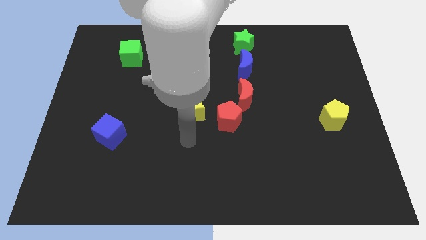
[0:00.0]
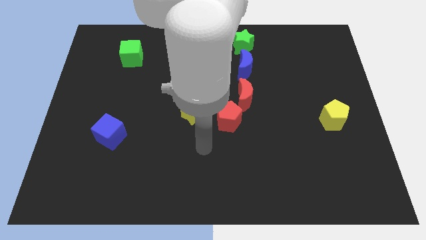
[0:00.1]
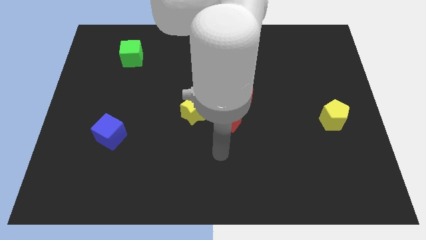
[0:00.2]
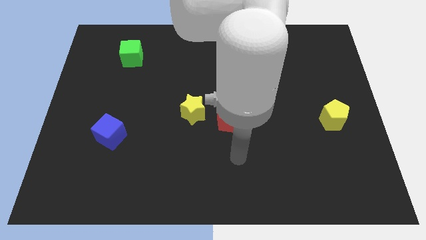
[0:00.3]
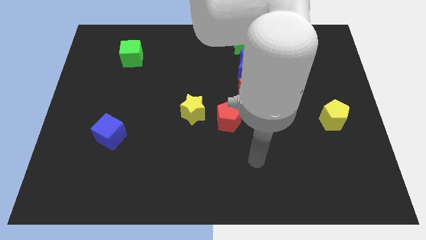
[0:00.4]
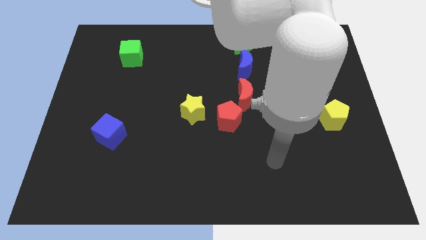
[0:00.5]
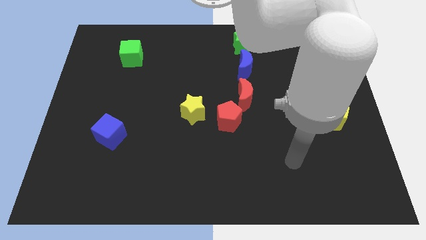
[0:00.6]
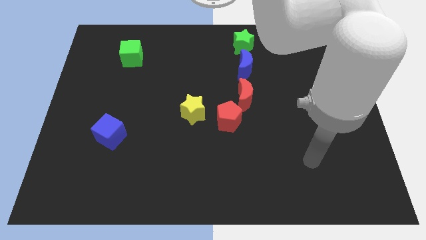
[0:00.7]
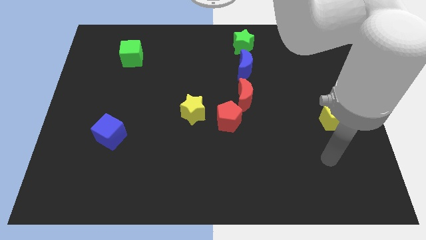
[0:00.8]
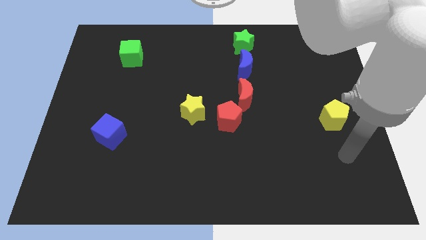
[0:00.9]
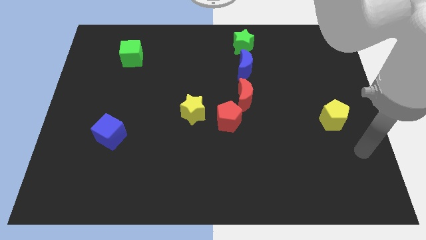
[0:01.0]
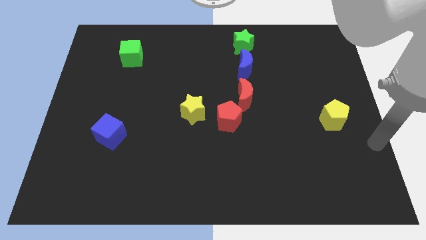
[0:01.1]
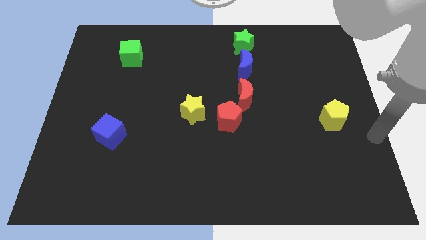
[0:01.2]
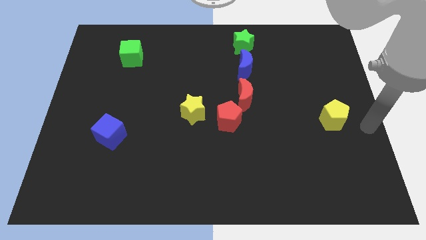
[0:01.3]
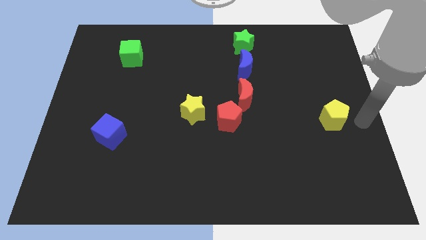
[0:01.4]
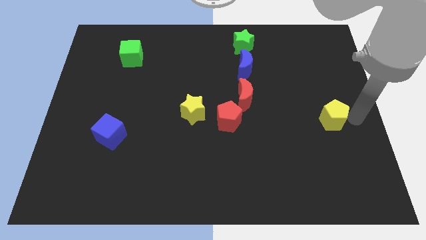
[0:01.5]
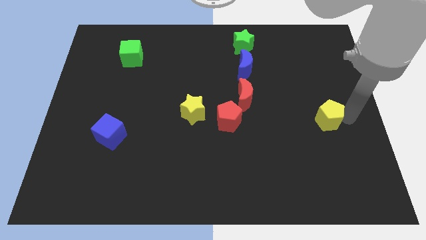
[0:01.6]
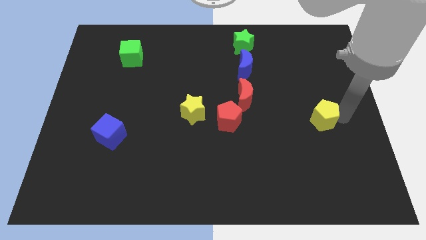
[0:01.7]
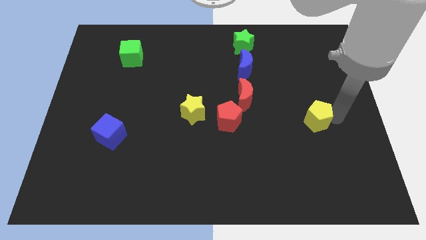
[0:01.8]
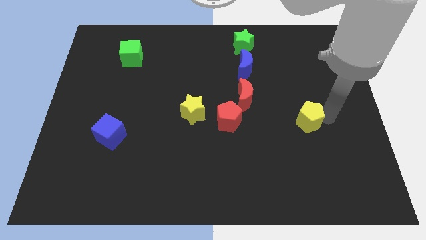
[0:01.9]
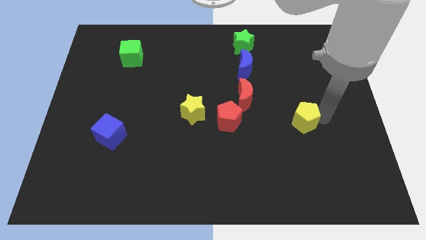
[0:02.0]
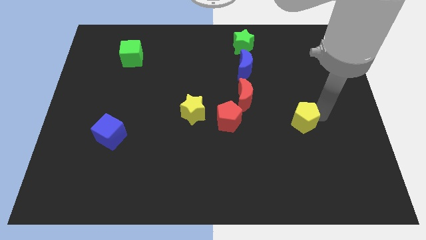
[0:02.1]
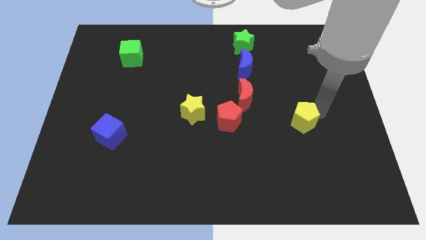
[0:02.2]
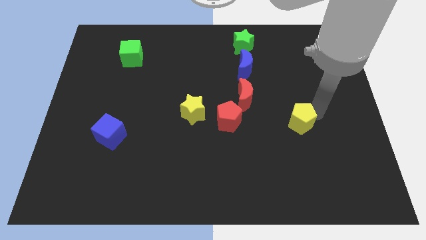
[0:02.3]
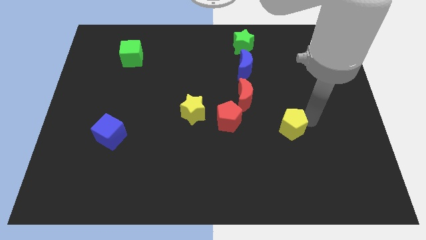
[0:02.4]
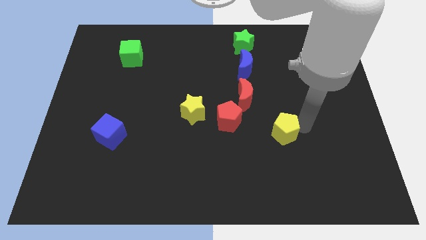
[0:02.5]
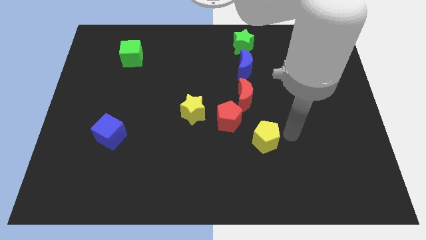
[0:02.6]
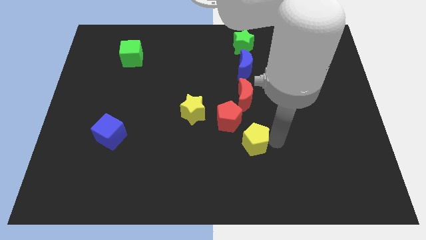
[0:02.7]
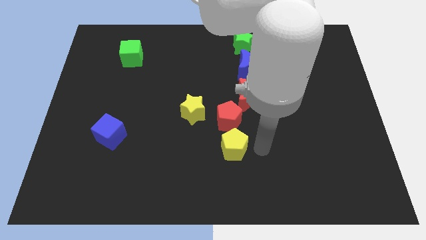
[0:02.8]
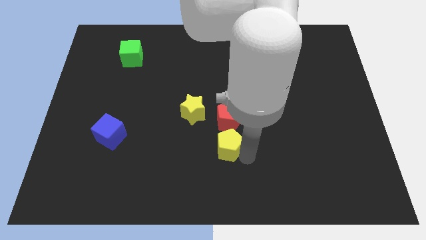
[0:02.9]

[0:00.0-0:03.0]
place the yellow pentagon down to the red pentagon

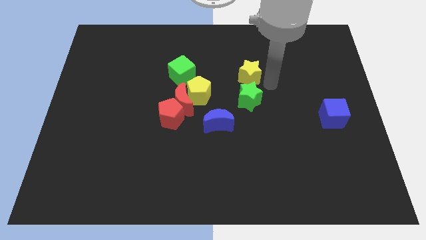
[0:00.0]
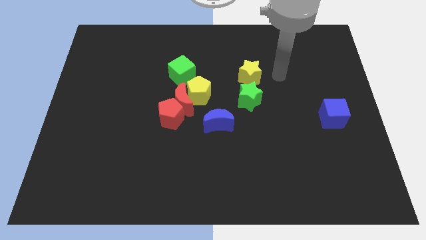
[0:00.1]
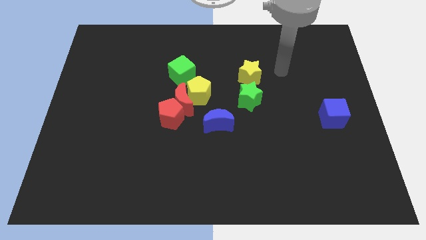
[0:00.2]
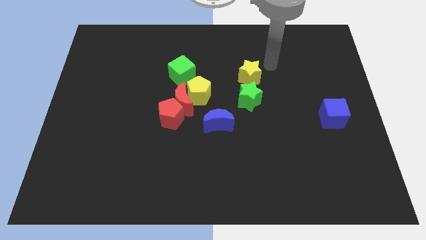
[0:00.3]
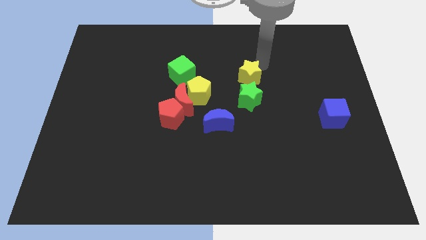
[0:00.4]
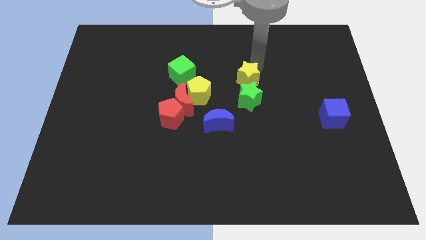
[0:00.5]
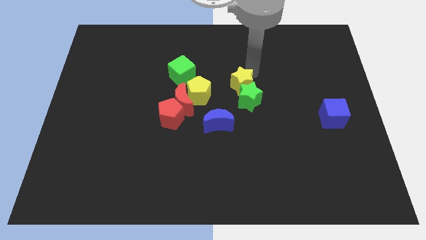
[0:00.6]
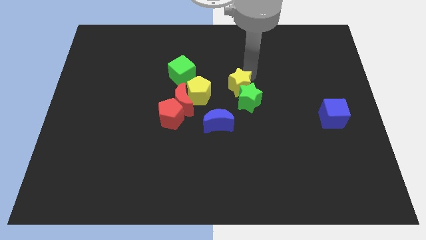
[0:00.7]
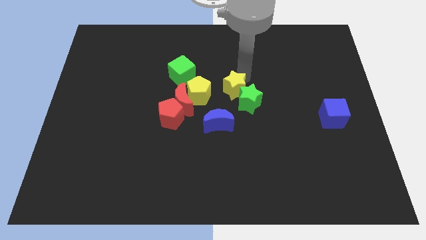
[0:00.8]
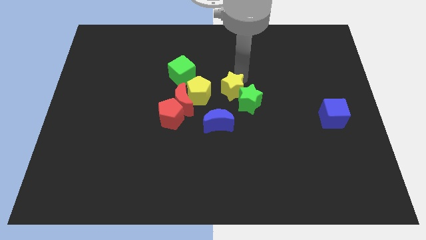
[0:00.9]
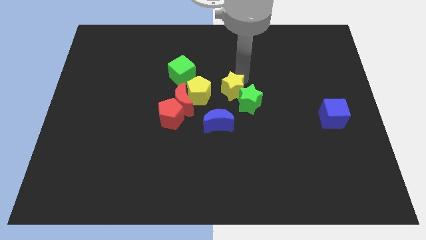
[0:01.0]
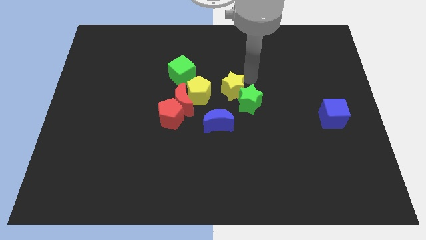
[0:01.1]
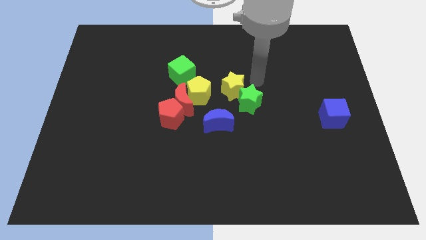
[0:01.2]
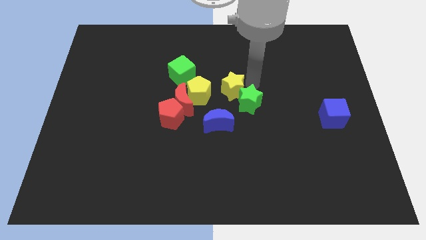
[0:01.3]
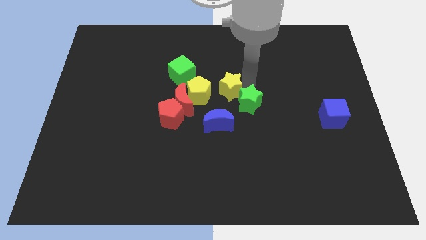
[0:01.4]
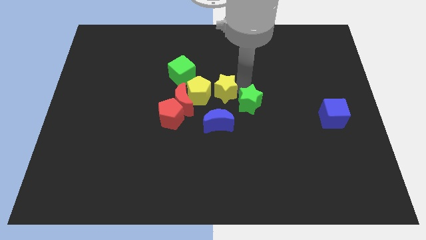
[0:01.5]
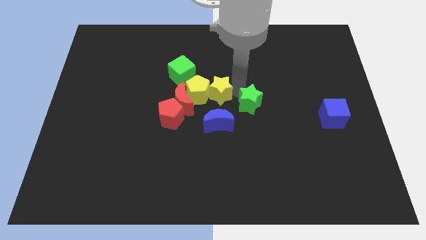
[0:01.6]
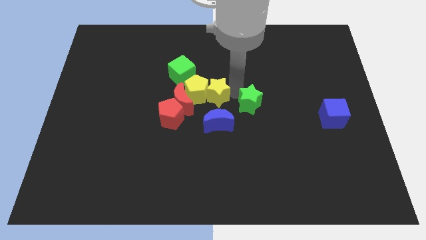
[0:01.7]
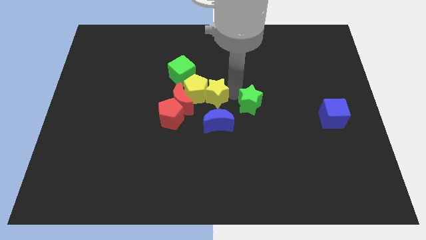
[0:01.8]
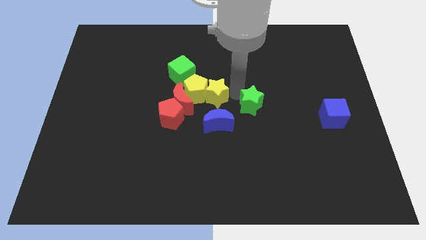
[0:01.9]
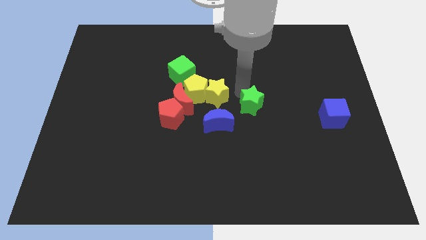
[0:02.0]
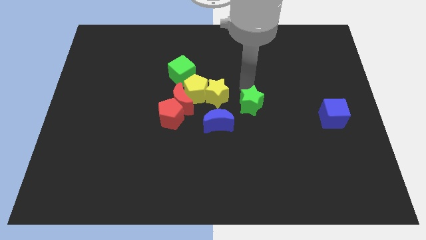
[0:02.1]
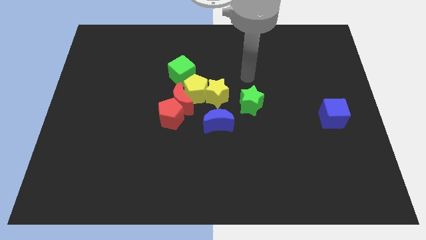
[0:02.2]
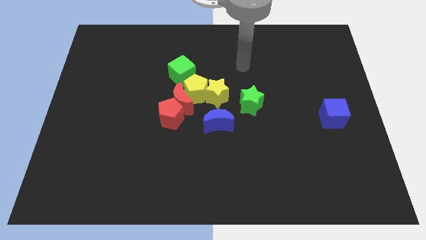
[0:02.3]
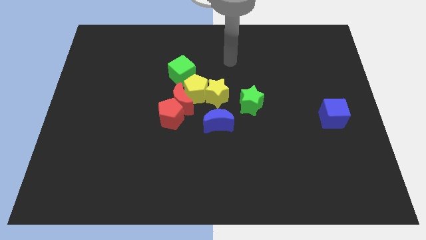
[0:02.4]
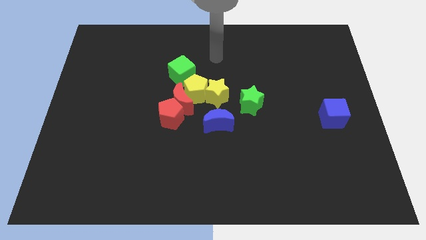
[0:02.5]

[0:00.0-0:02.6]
push the yellow star towards the yellow pentagon

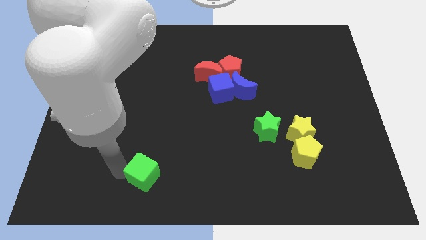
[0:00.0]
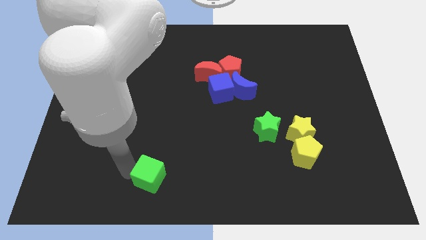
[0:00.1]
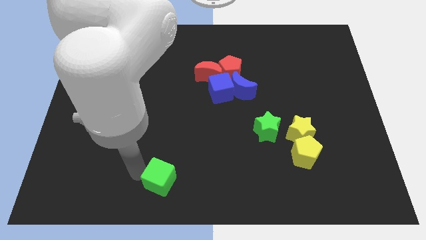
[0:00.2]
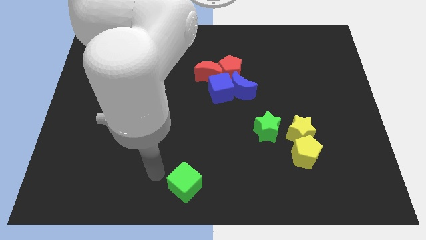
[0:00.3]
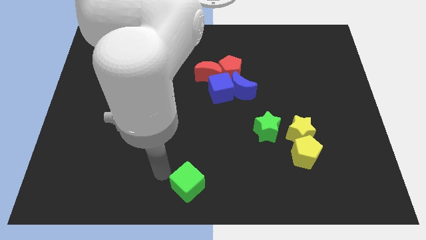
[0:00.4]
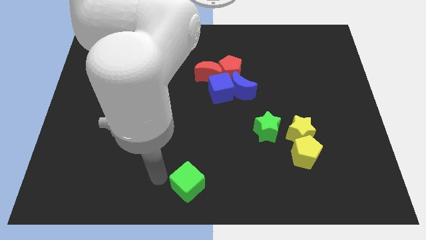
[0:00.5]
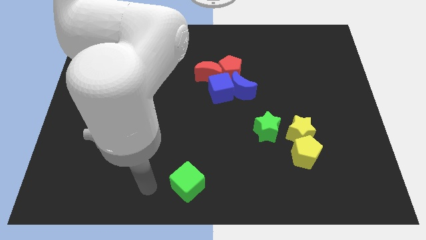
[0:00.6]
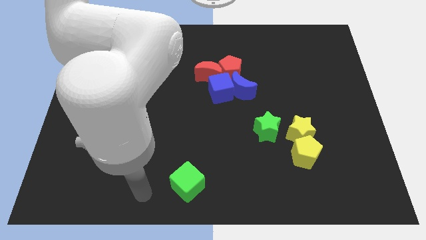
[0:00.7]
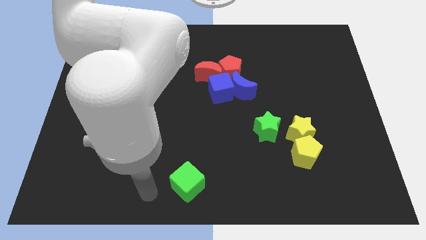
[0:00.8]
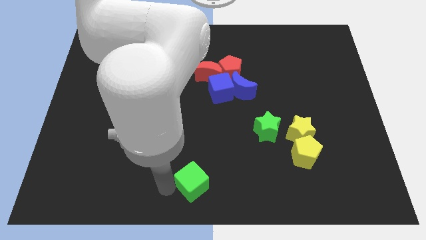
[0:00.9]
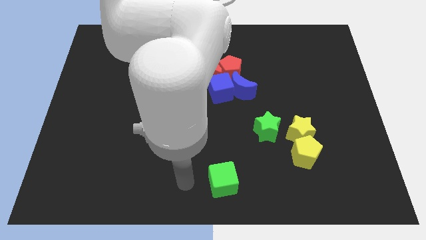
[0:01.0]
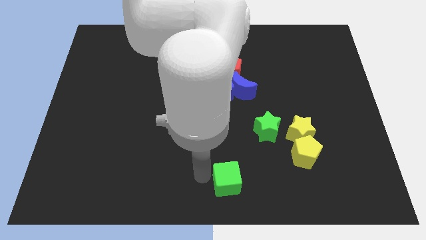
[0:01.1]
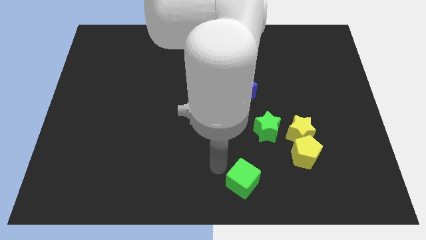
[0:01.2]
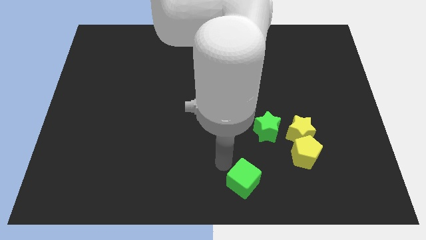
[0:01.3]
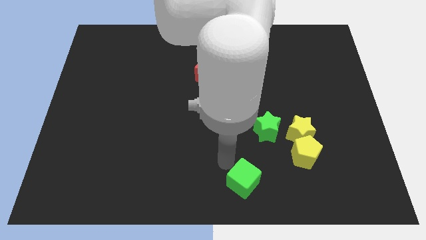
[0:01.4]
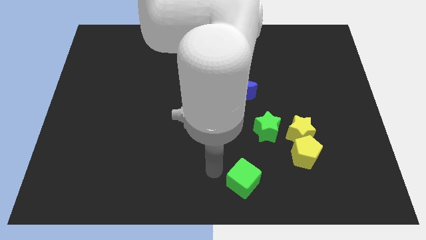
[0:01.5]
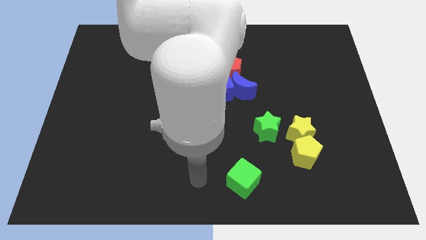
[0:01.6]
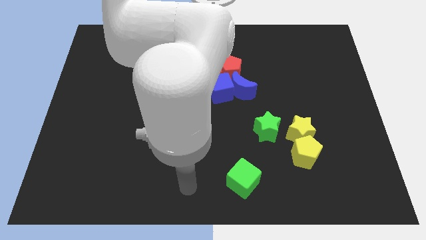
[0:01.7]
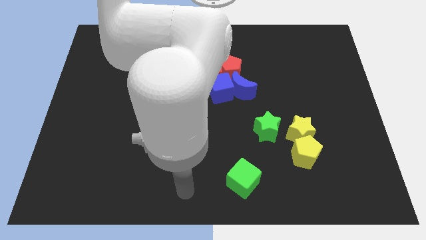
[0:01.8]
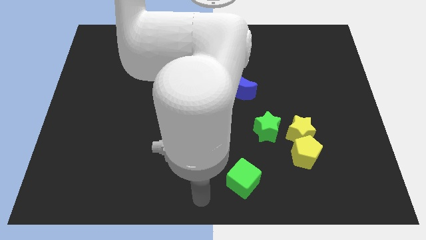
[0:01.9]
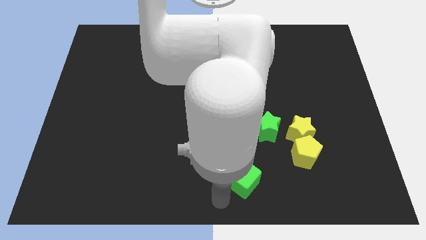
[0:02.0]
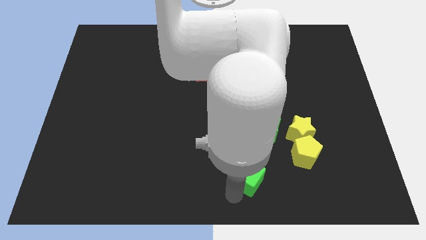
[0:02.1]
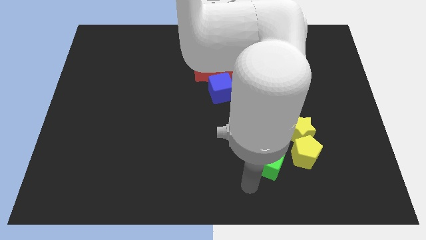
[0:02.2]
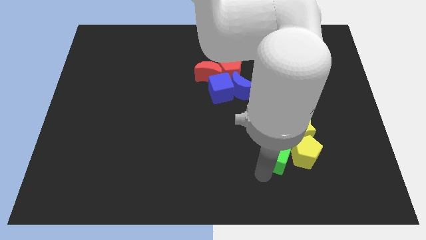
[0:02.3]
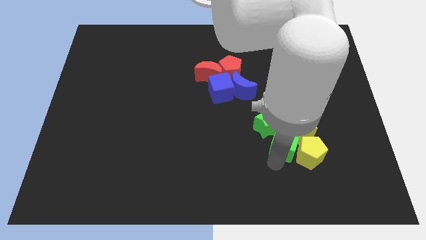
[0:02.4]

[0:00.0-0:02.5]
push the green cube near to yellow pentagon

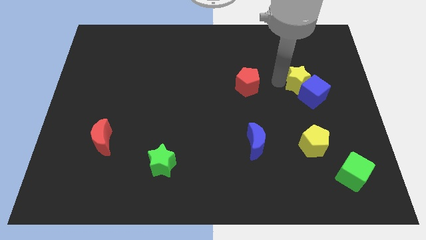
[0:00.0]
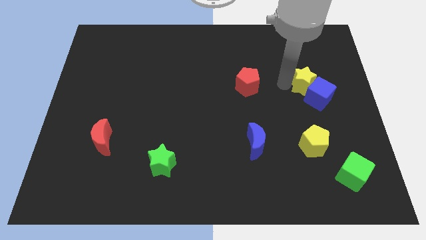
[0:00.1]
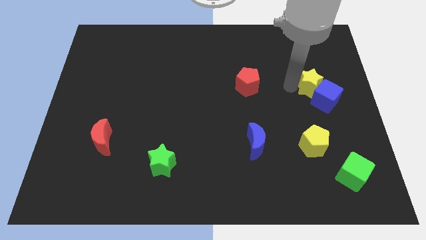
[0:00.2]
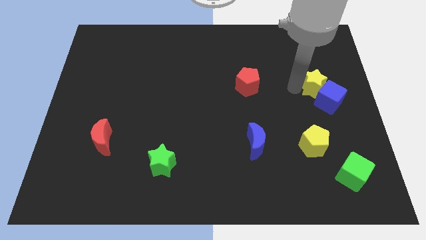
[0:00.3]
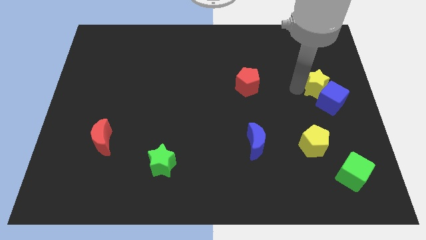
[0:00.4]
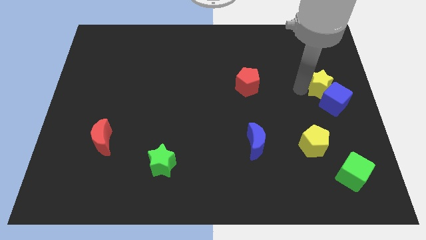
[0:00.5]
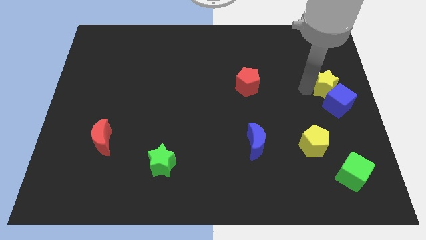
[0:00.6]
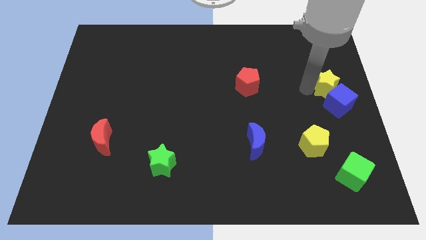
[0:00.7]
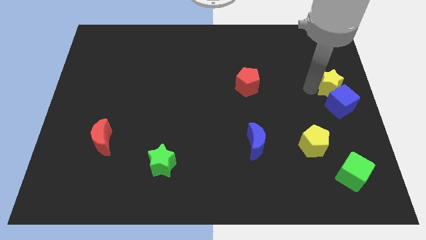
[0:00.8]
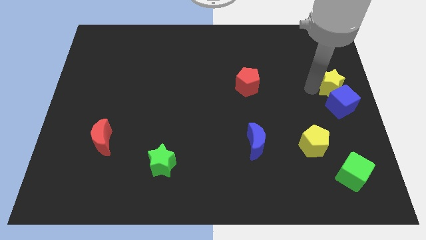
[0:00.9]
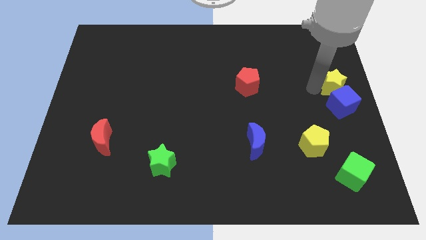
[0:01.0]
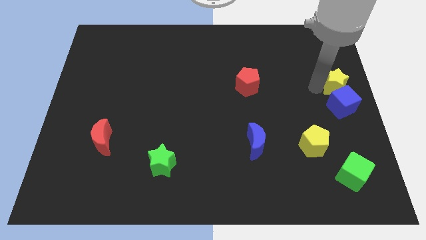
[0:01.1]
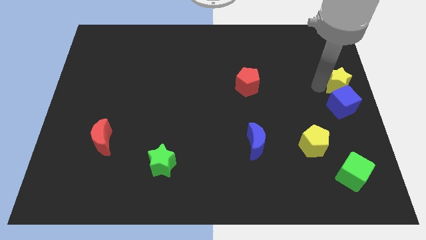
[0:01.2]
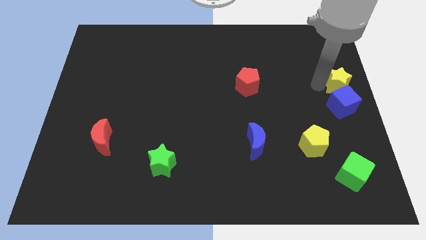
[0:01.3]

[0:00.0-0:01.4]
push the blue cube with the yellow star to the right
